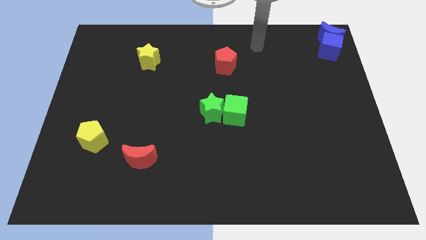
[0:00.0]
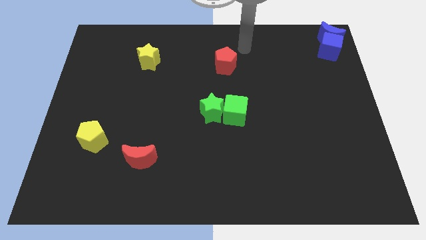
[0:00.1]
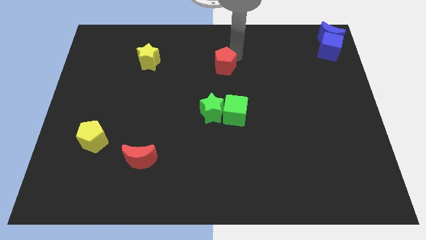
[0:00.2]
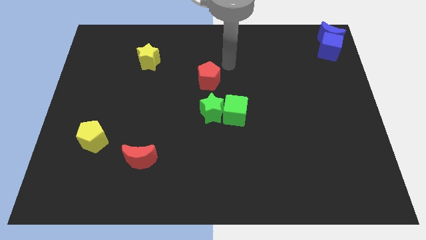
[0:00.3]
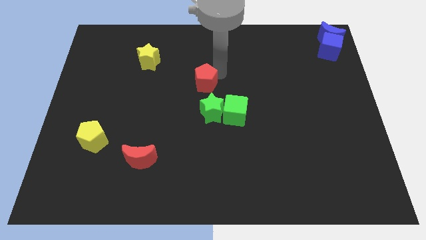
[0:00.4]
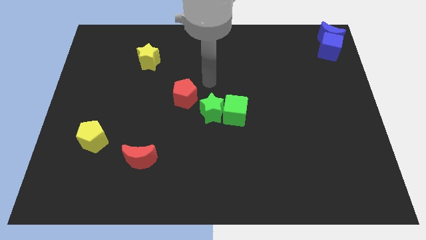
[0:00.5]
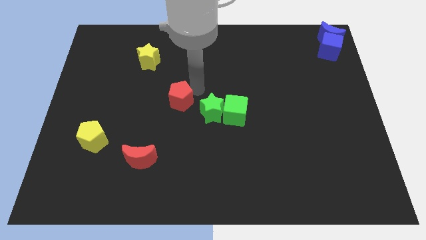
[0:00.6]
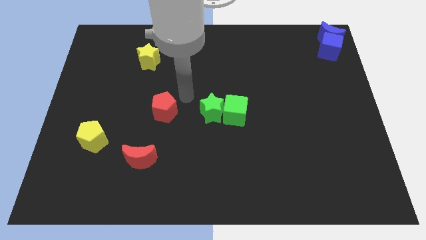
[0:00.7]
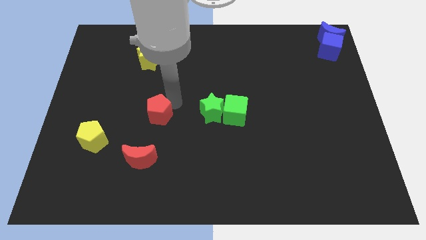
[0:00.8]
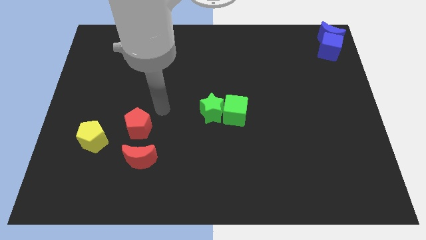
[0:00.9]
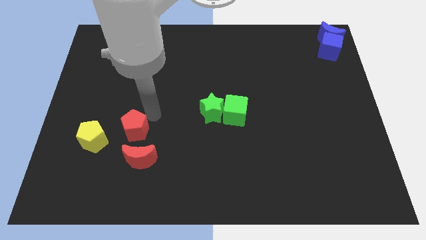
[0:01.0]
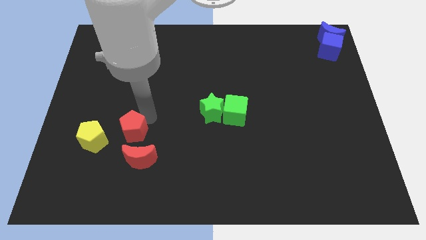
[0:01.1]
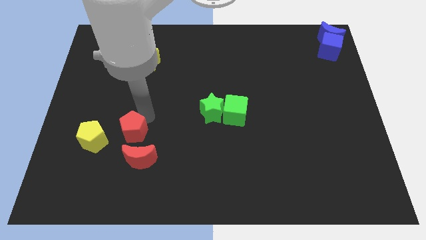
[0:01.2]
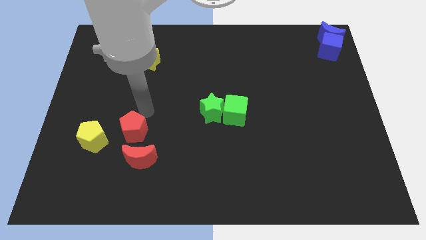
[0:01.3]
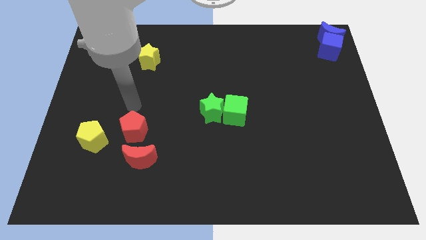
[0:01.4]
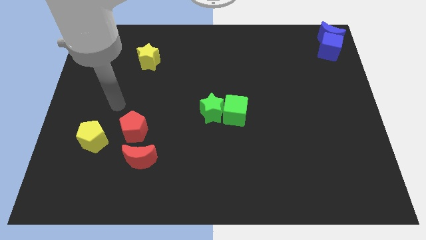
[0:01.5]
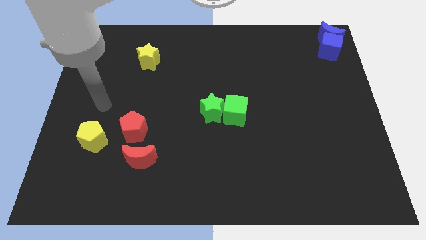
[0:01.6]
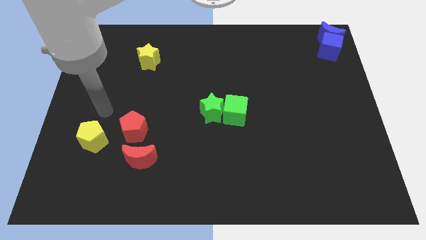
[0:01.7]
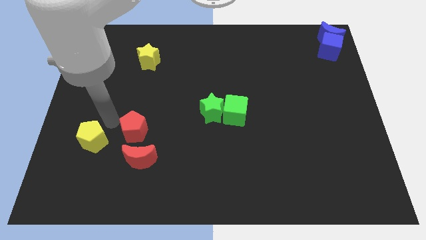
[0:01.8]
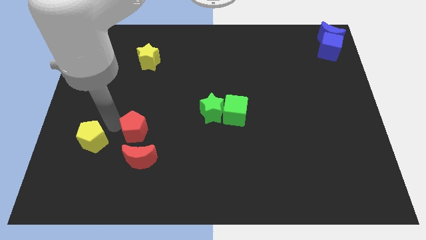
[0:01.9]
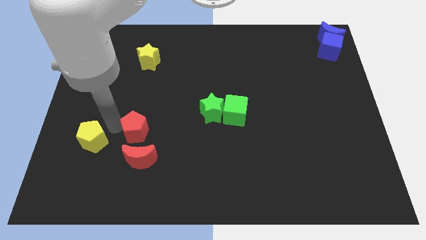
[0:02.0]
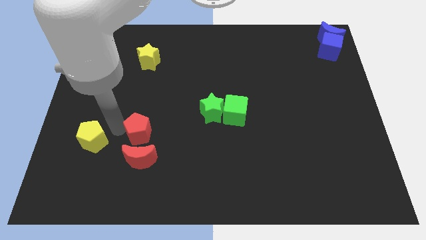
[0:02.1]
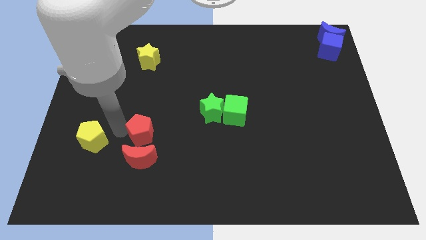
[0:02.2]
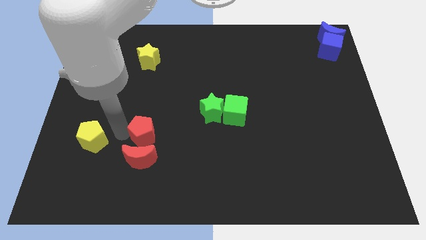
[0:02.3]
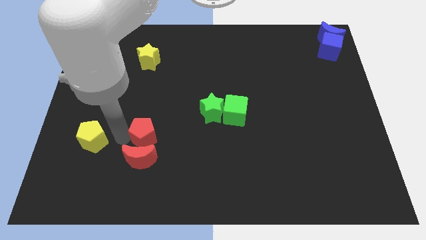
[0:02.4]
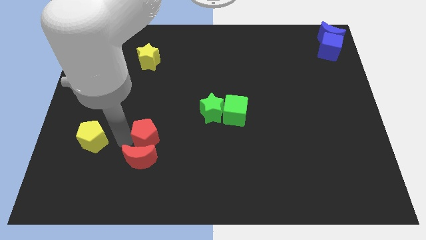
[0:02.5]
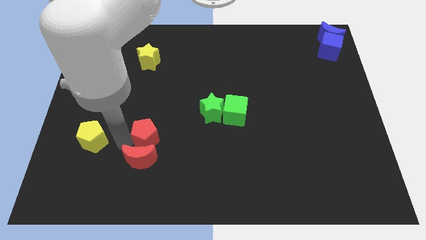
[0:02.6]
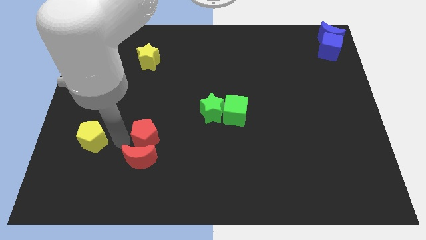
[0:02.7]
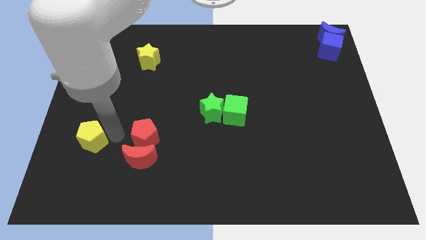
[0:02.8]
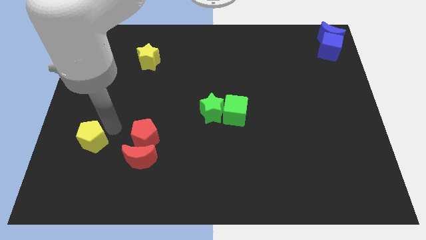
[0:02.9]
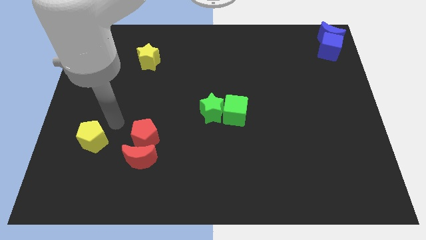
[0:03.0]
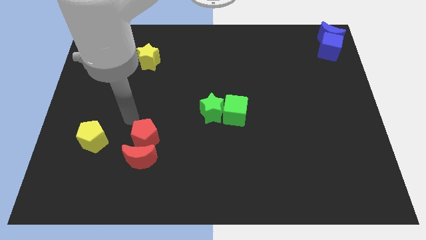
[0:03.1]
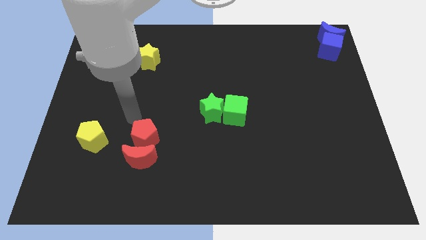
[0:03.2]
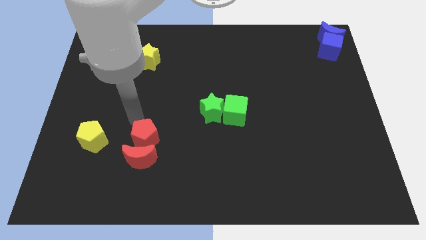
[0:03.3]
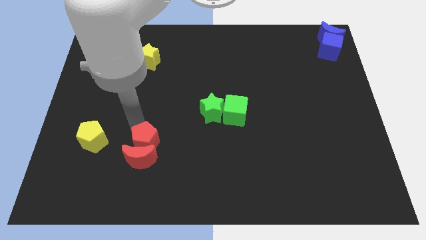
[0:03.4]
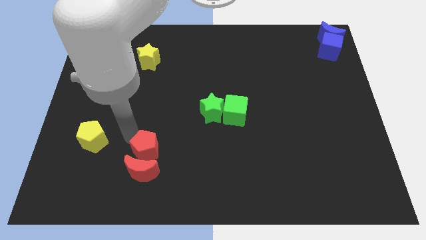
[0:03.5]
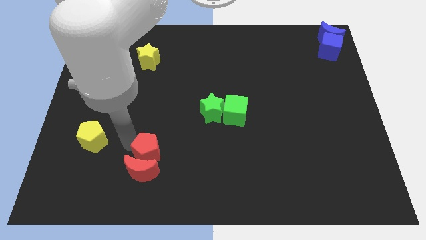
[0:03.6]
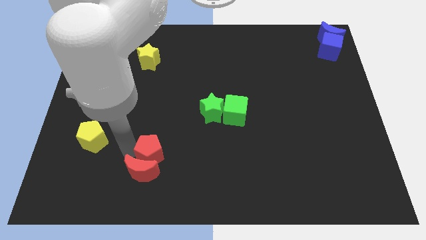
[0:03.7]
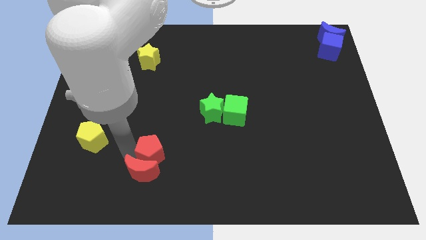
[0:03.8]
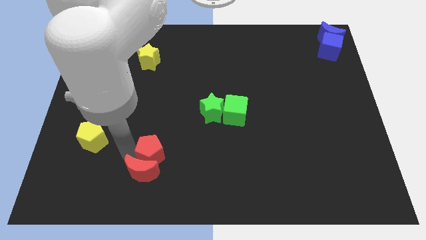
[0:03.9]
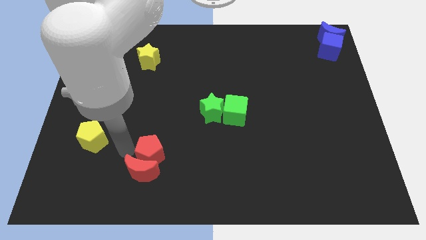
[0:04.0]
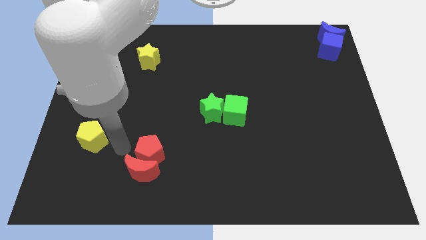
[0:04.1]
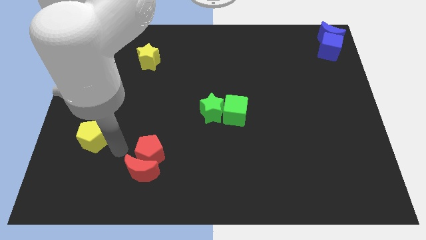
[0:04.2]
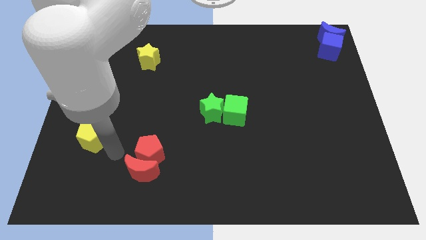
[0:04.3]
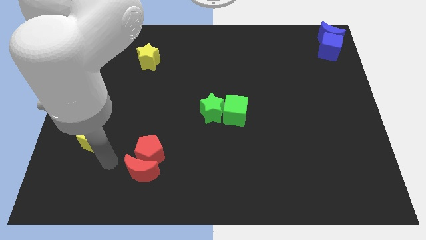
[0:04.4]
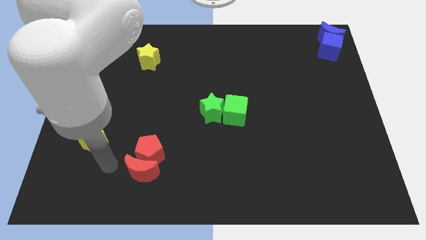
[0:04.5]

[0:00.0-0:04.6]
place the red pentagon above the red moon

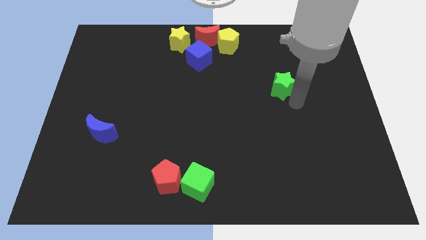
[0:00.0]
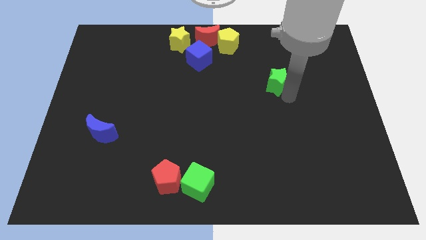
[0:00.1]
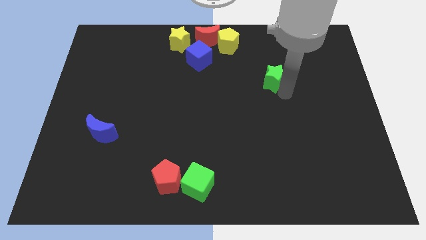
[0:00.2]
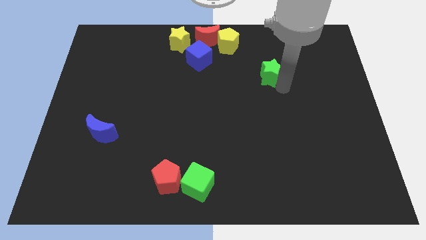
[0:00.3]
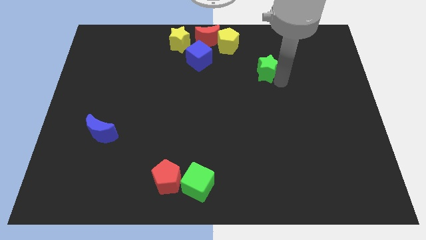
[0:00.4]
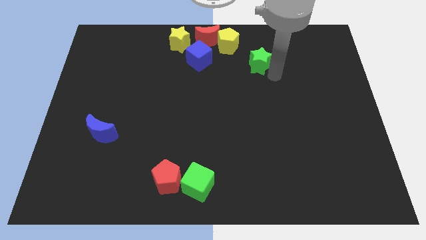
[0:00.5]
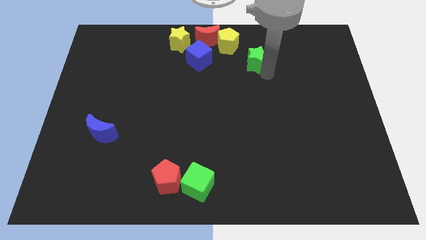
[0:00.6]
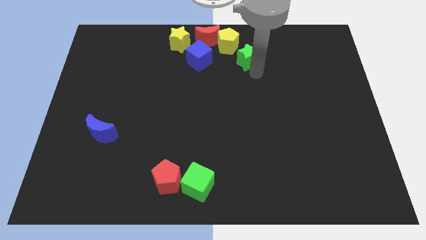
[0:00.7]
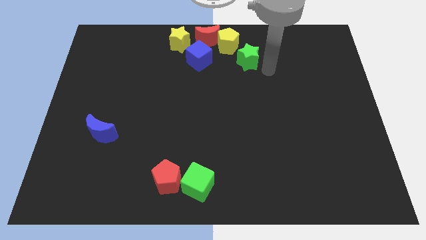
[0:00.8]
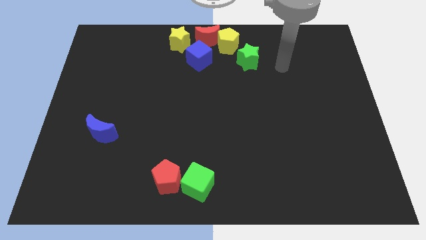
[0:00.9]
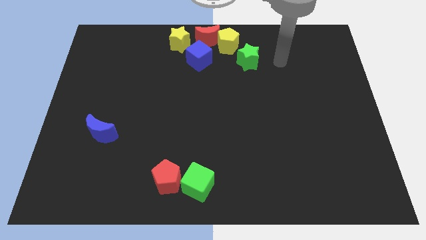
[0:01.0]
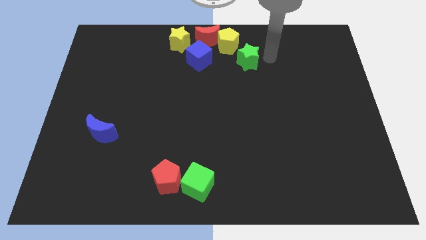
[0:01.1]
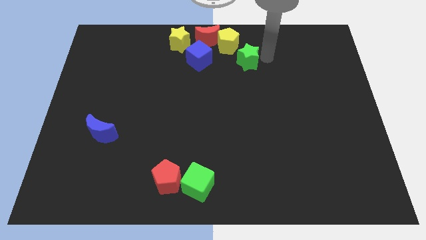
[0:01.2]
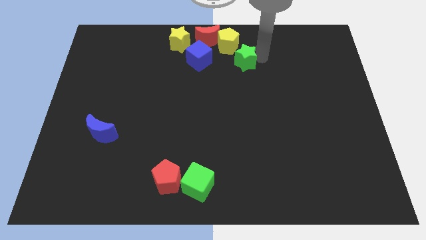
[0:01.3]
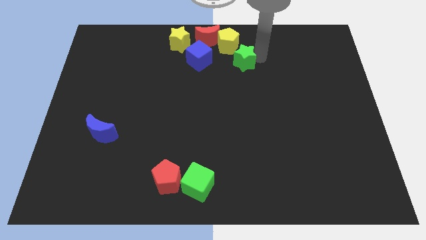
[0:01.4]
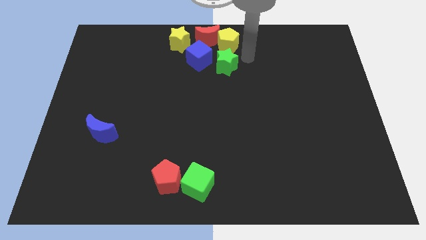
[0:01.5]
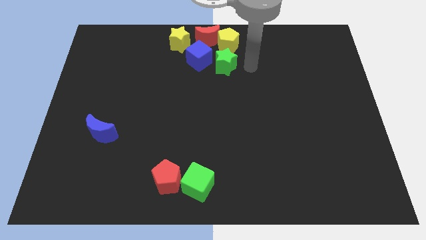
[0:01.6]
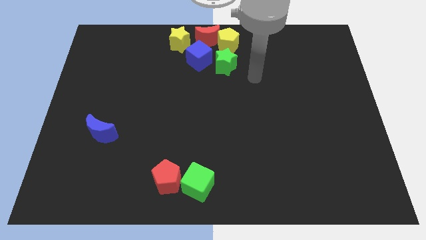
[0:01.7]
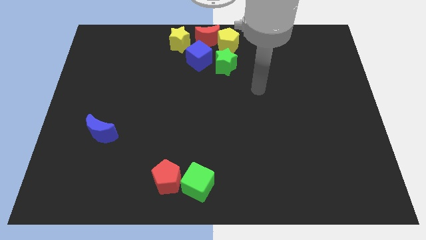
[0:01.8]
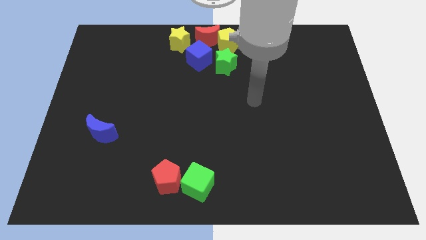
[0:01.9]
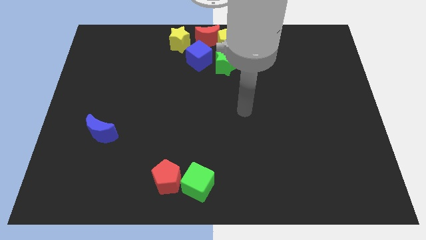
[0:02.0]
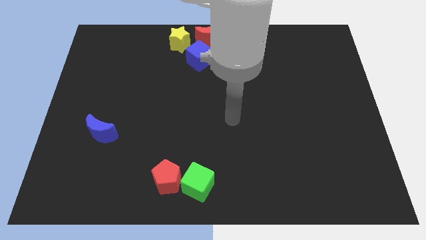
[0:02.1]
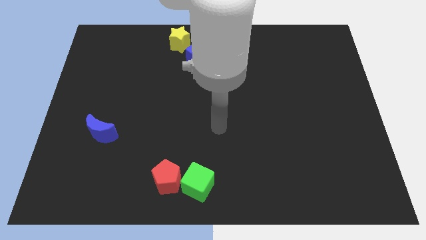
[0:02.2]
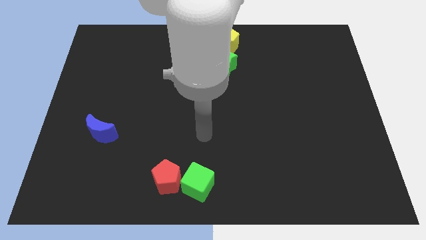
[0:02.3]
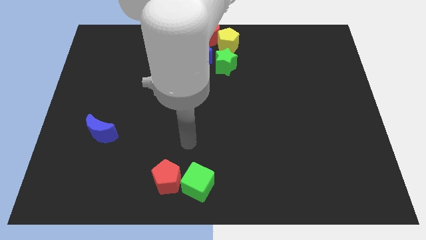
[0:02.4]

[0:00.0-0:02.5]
place a green star down to the yellow pentagon

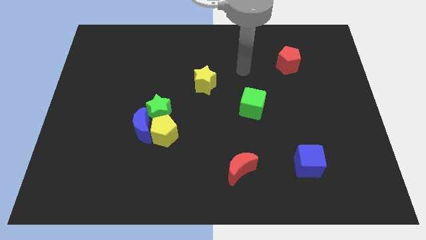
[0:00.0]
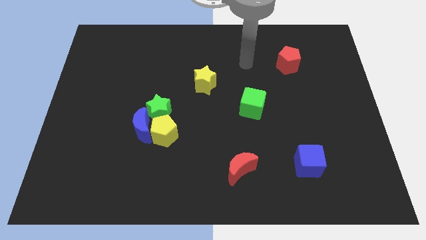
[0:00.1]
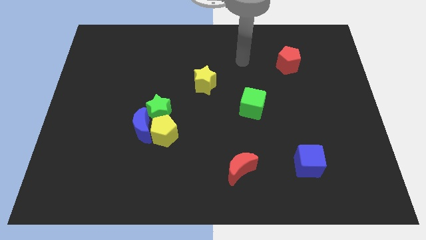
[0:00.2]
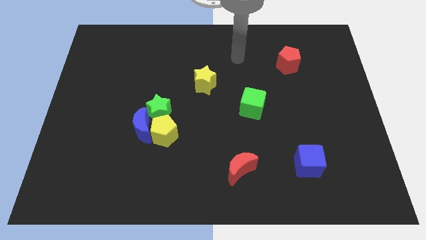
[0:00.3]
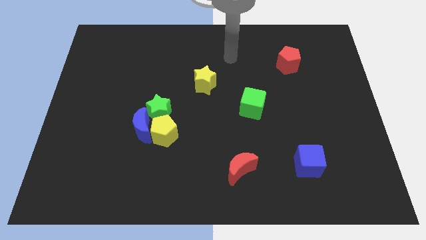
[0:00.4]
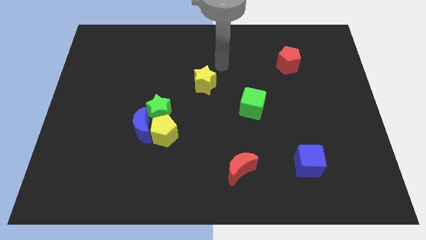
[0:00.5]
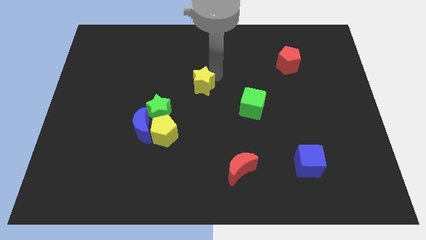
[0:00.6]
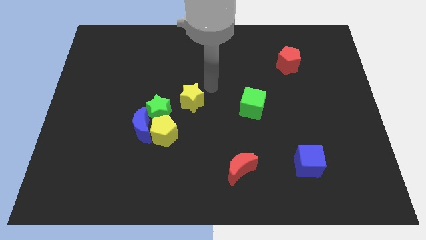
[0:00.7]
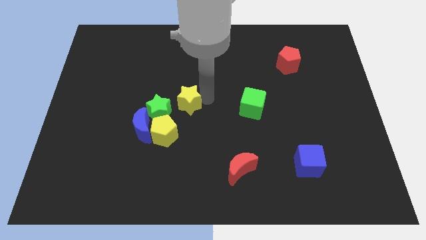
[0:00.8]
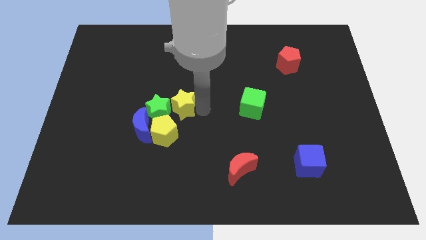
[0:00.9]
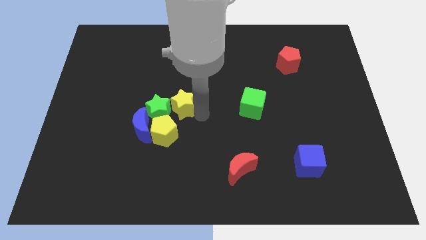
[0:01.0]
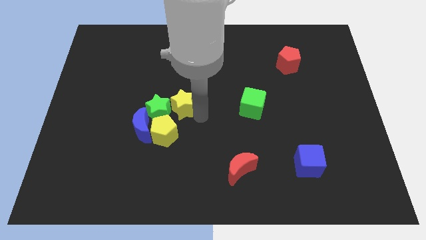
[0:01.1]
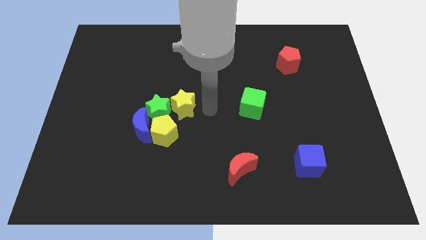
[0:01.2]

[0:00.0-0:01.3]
push the yellow star into the green star

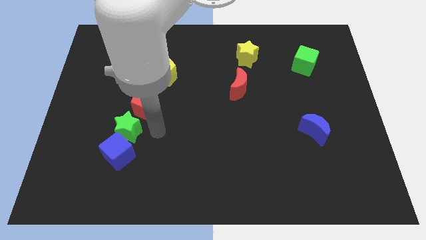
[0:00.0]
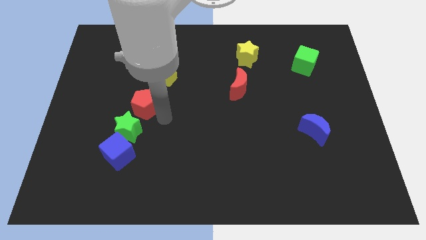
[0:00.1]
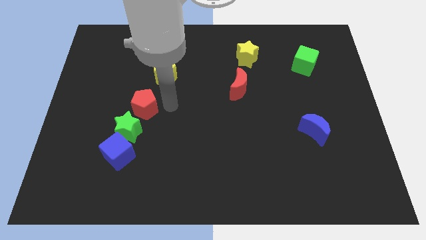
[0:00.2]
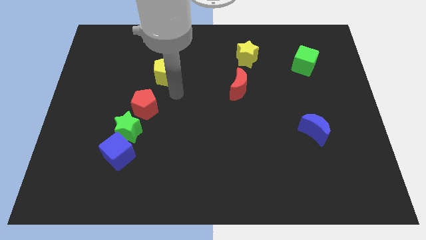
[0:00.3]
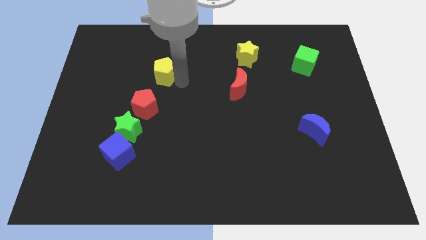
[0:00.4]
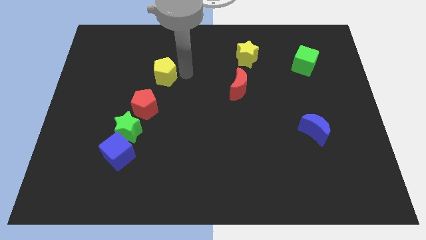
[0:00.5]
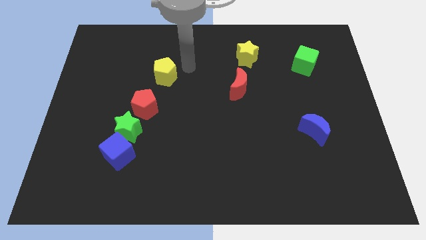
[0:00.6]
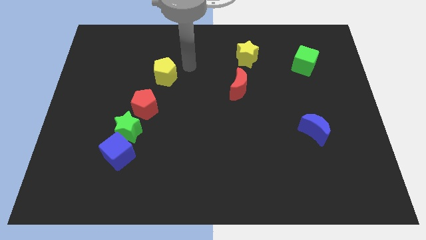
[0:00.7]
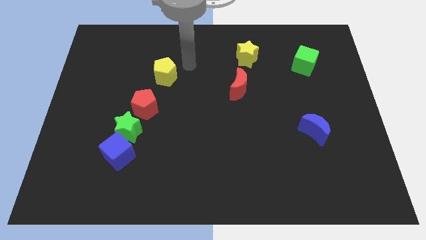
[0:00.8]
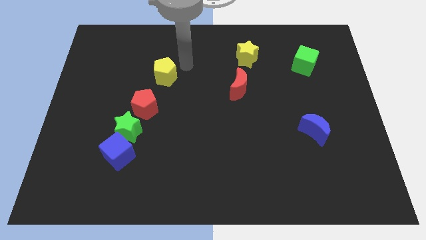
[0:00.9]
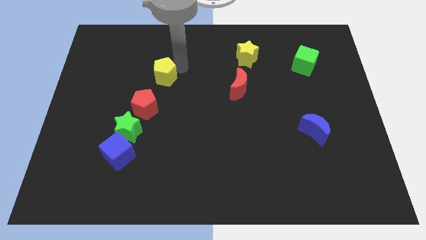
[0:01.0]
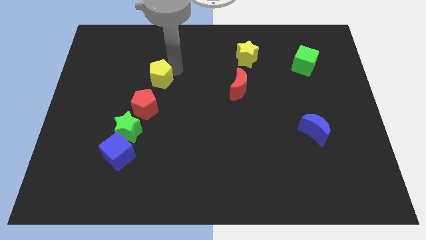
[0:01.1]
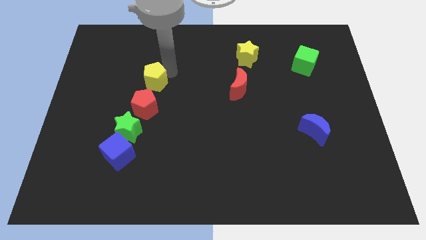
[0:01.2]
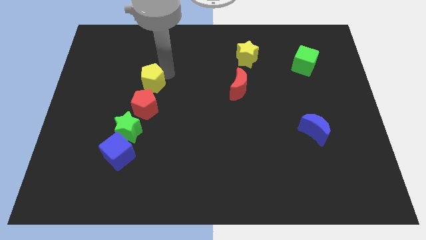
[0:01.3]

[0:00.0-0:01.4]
push the yellow pentagon slightly to the bottom
